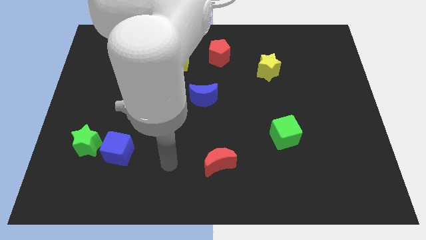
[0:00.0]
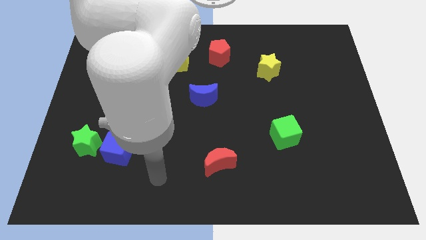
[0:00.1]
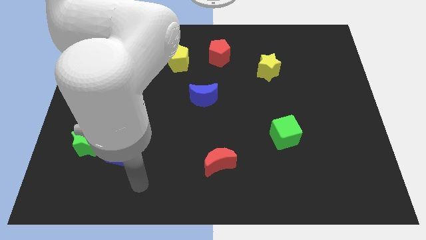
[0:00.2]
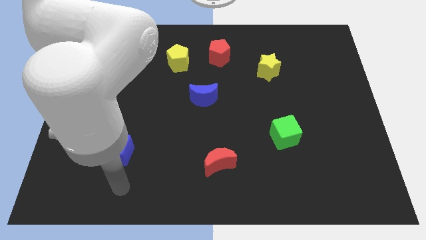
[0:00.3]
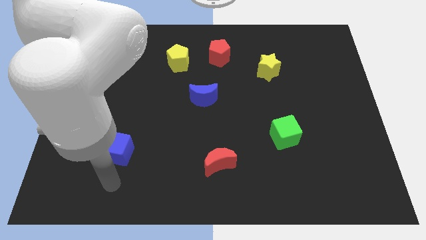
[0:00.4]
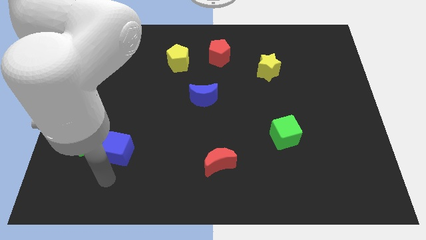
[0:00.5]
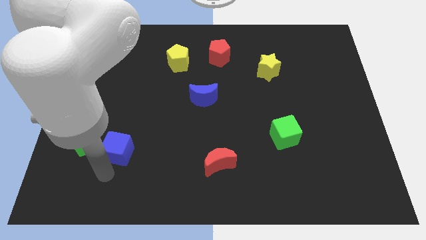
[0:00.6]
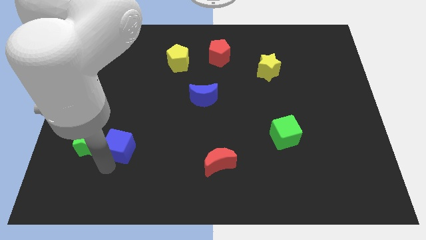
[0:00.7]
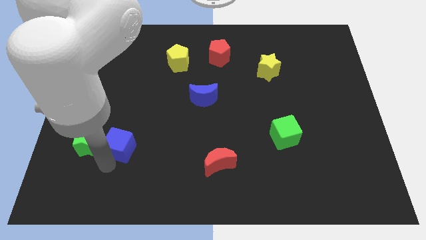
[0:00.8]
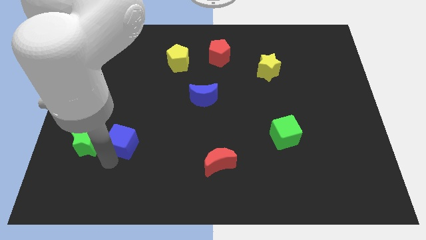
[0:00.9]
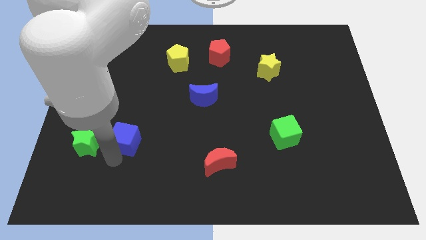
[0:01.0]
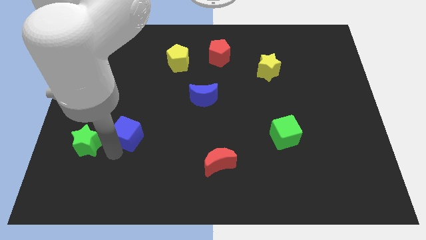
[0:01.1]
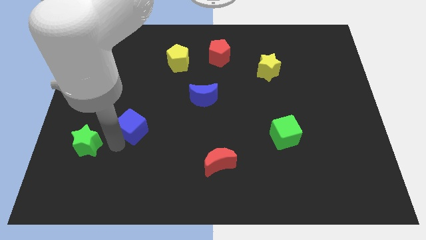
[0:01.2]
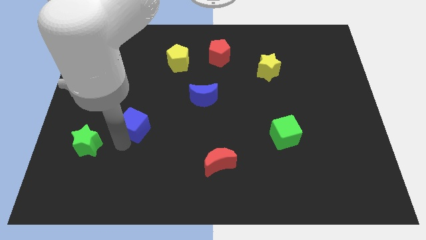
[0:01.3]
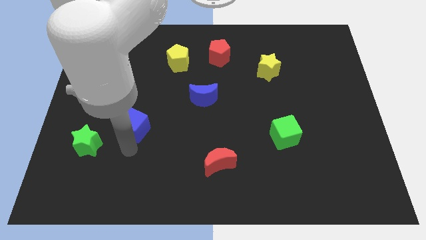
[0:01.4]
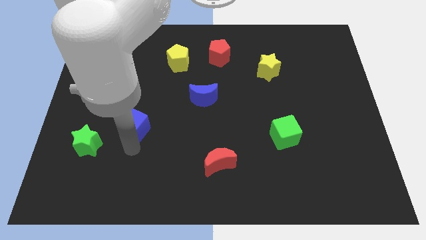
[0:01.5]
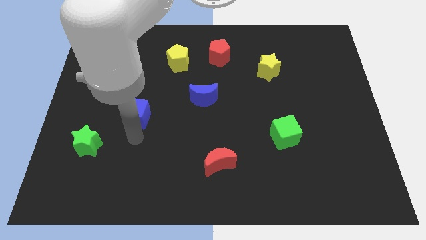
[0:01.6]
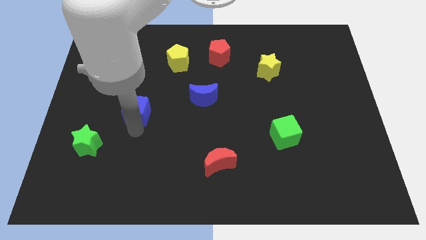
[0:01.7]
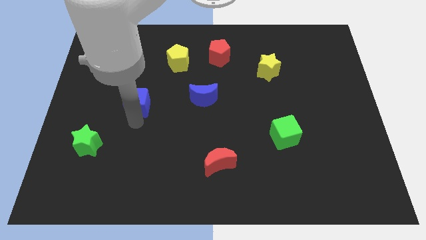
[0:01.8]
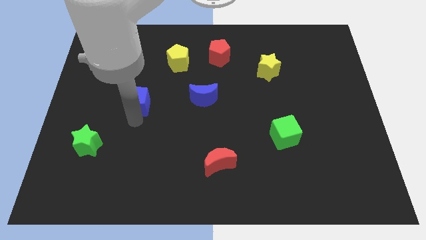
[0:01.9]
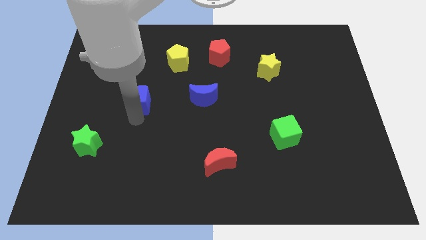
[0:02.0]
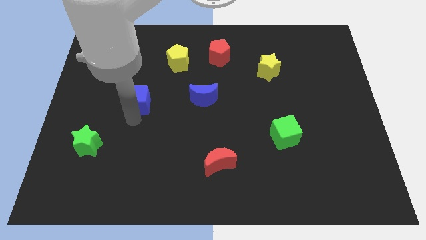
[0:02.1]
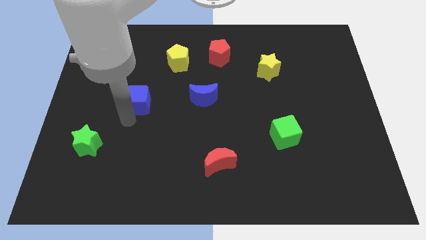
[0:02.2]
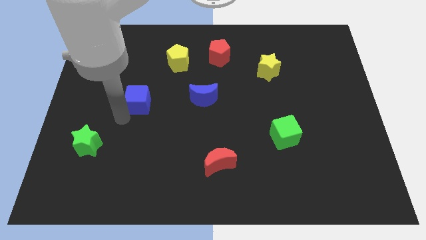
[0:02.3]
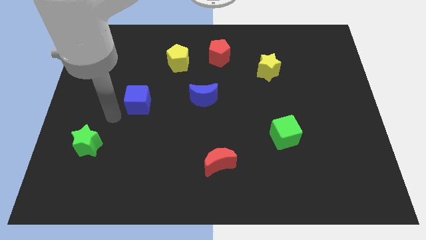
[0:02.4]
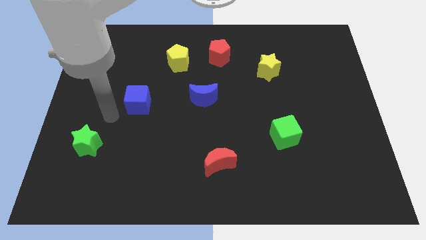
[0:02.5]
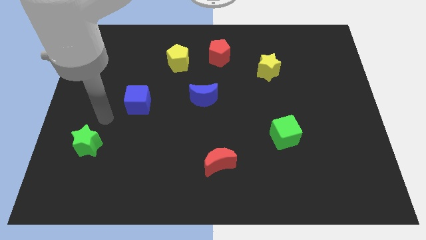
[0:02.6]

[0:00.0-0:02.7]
move blue cube parallel to the blue crescent in the left

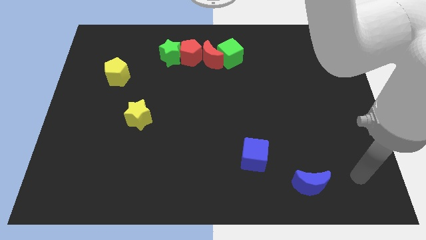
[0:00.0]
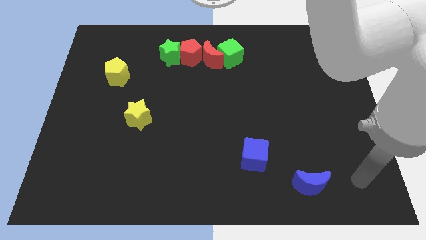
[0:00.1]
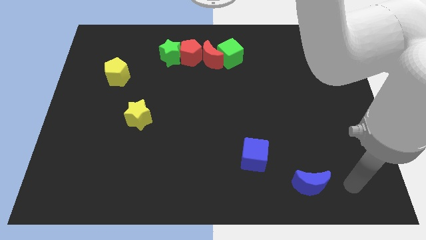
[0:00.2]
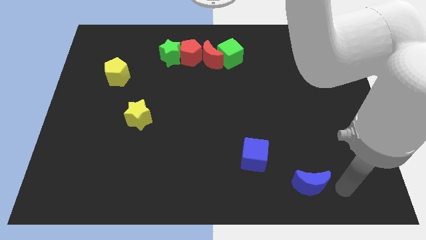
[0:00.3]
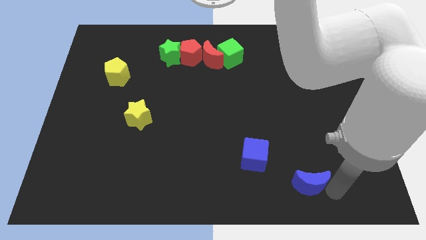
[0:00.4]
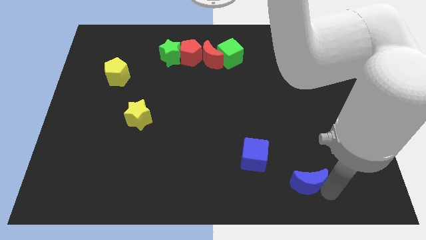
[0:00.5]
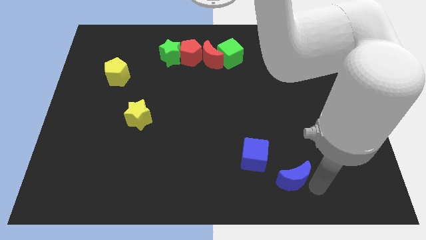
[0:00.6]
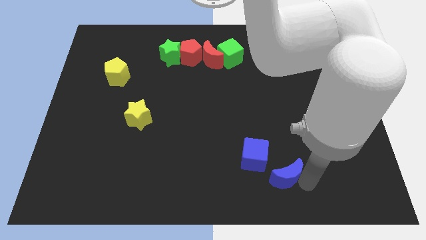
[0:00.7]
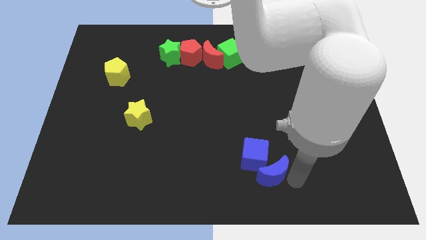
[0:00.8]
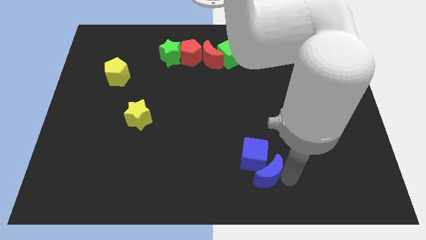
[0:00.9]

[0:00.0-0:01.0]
push the blue crescent close to the blue cube

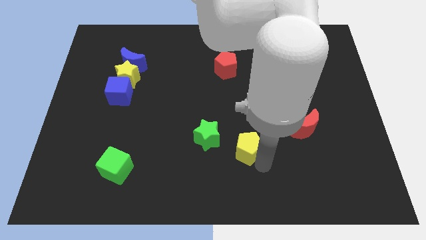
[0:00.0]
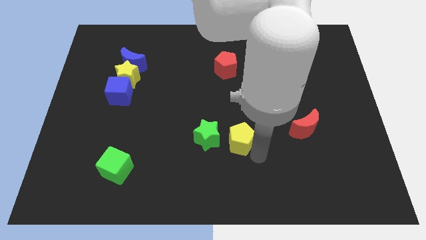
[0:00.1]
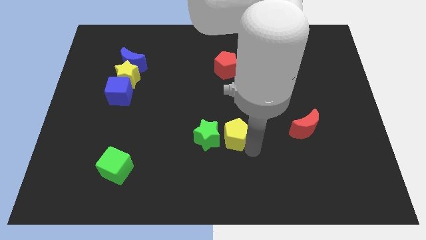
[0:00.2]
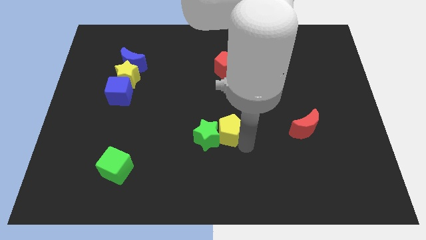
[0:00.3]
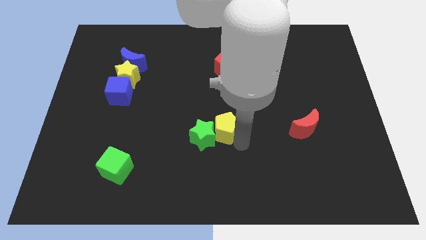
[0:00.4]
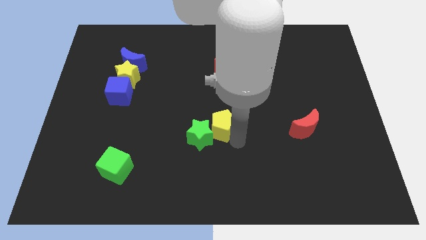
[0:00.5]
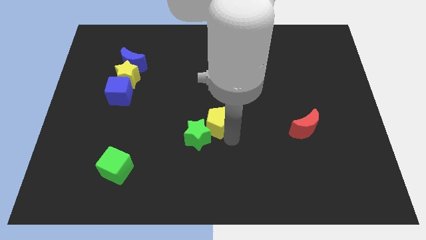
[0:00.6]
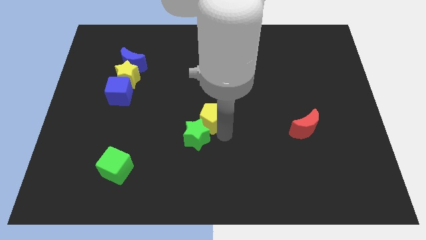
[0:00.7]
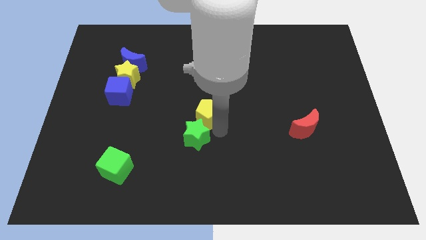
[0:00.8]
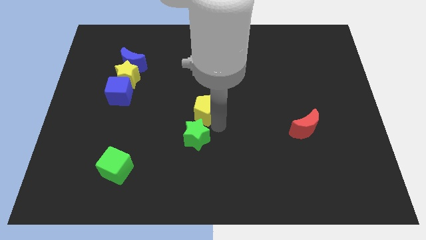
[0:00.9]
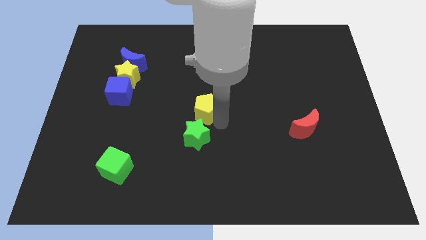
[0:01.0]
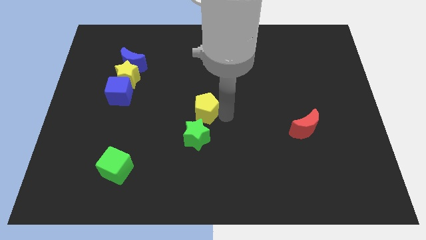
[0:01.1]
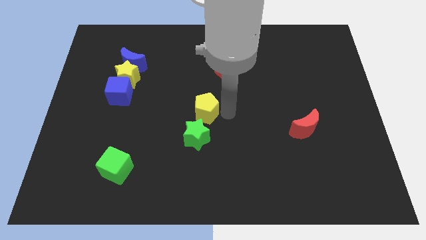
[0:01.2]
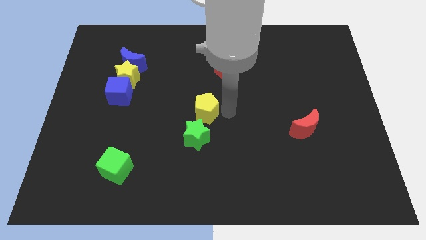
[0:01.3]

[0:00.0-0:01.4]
push the yellow pentagon into the green star

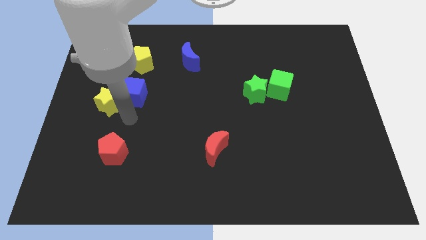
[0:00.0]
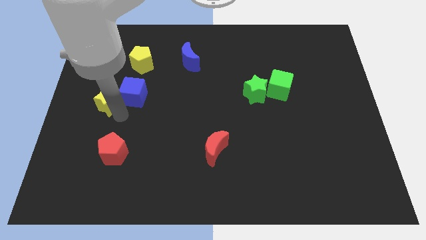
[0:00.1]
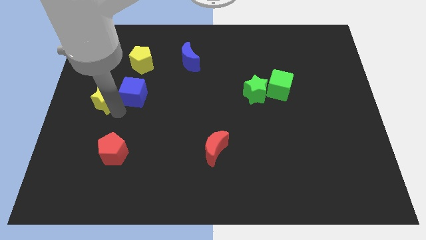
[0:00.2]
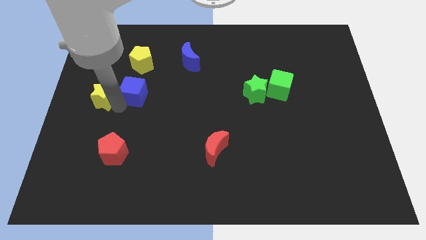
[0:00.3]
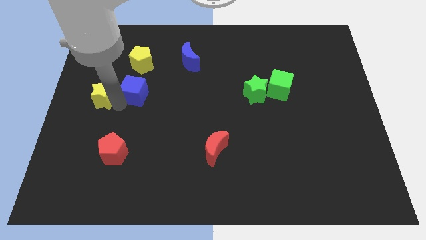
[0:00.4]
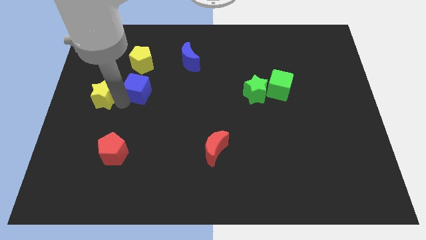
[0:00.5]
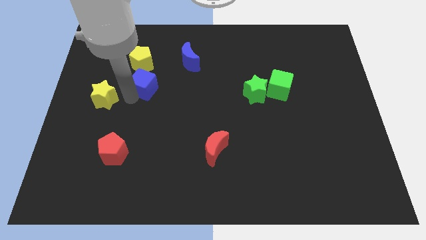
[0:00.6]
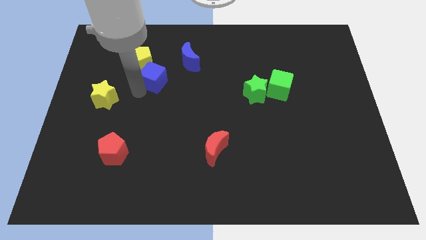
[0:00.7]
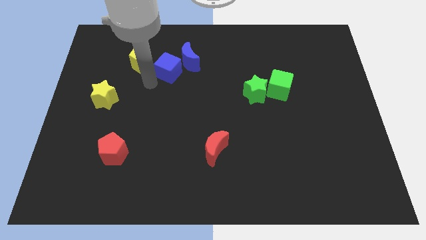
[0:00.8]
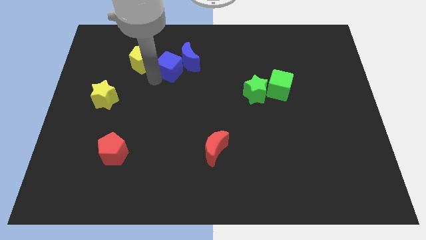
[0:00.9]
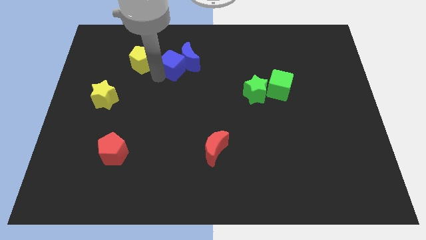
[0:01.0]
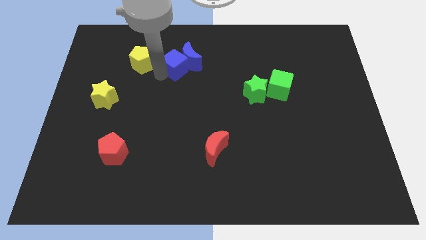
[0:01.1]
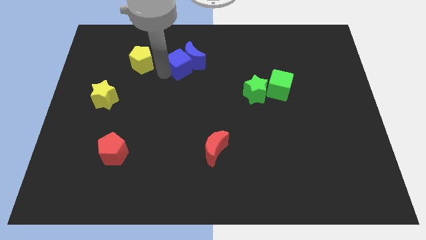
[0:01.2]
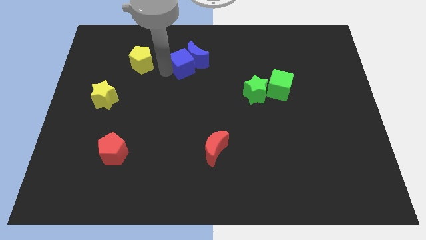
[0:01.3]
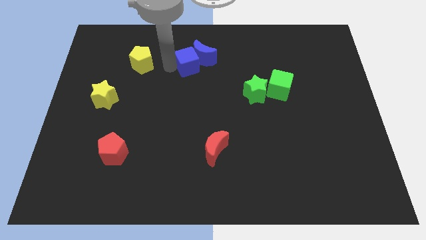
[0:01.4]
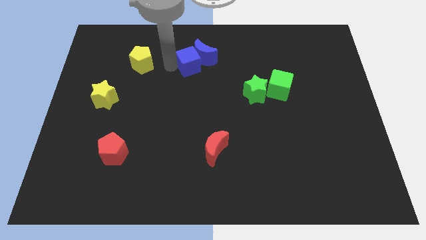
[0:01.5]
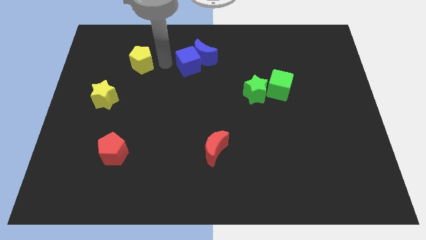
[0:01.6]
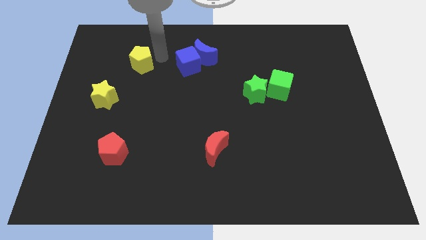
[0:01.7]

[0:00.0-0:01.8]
move the blue cube into the blue crescent

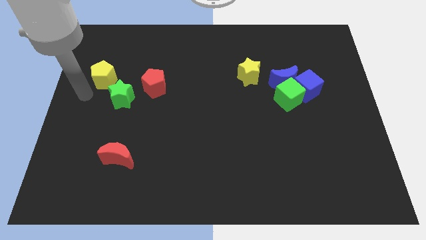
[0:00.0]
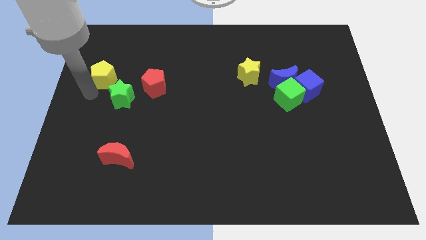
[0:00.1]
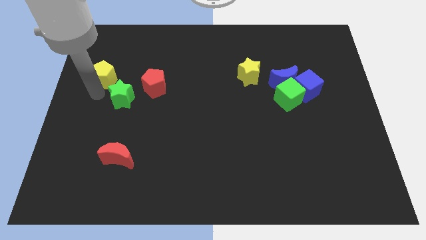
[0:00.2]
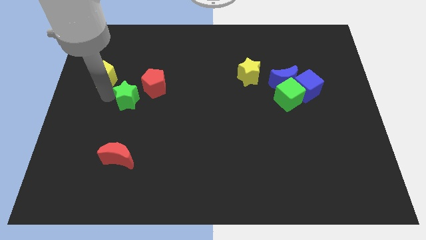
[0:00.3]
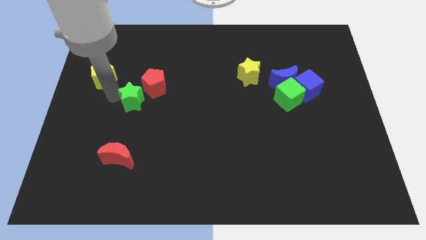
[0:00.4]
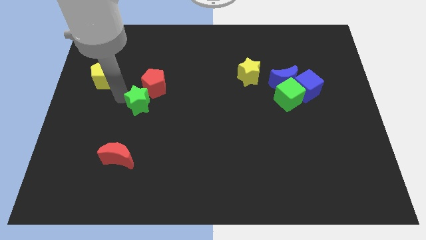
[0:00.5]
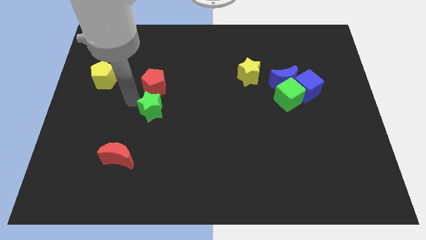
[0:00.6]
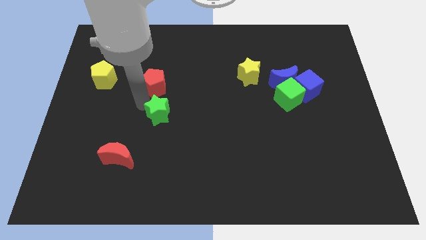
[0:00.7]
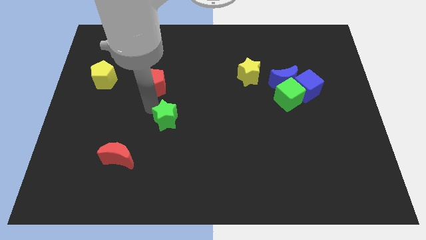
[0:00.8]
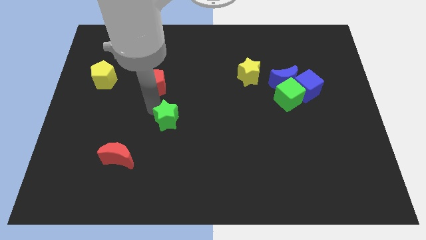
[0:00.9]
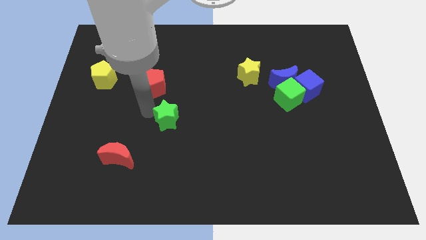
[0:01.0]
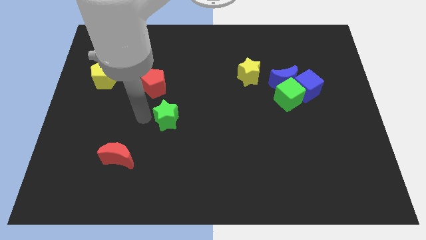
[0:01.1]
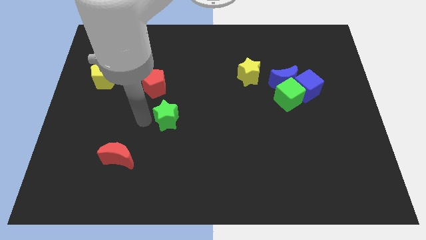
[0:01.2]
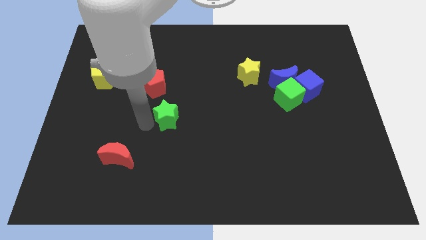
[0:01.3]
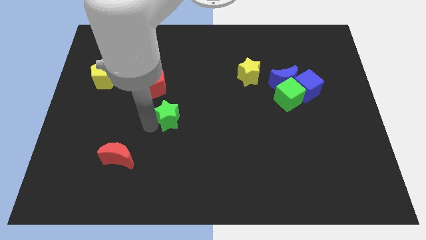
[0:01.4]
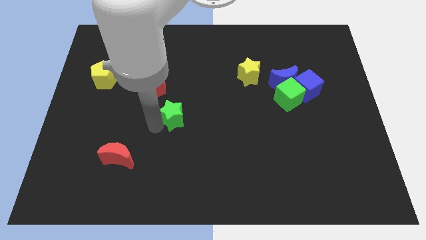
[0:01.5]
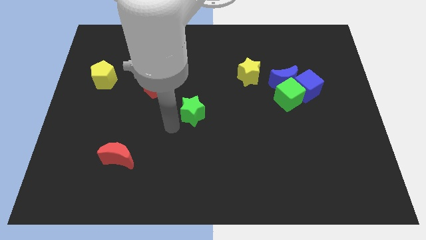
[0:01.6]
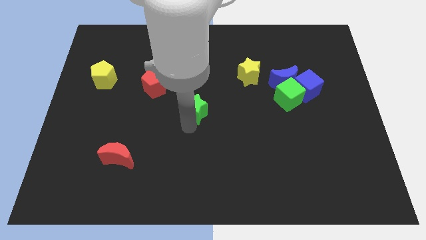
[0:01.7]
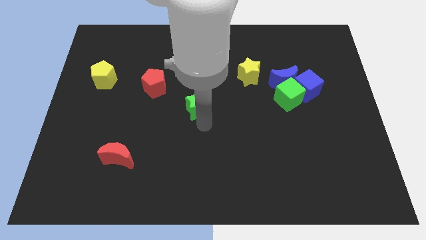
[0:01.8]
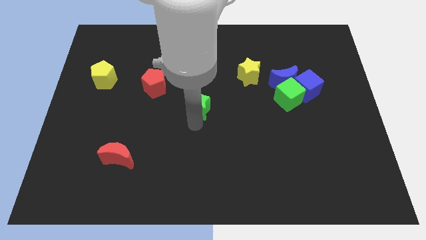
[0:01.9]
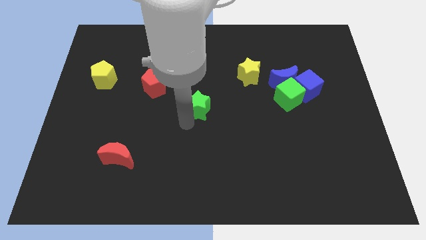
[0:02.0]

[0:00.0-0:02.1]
place the green star at the center of the board
